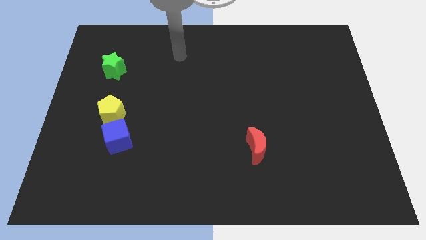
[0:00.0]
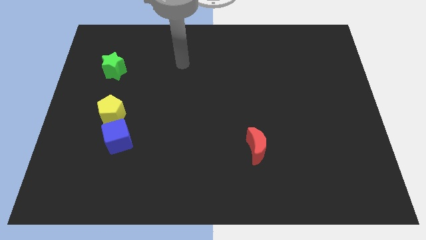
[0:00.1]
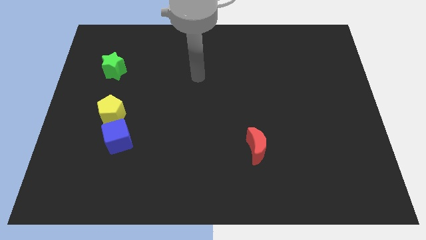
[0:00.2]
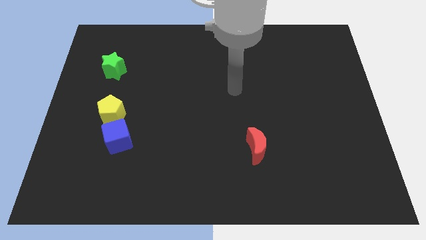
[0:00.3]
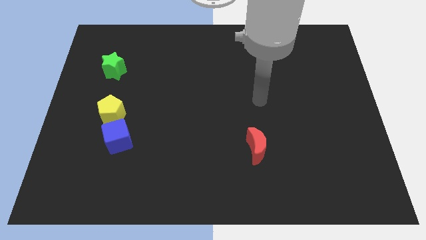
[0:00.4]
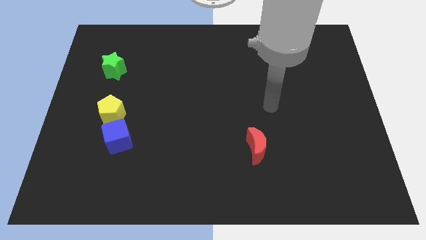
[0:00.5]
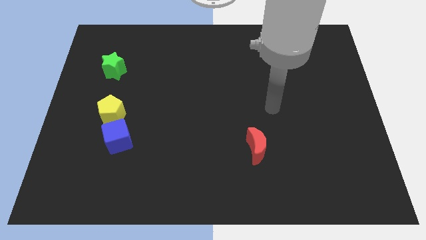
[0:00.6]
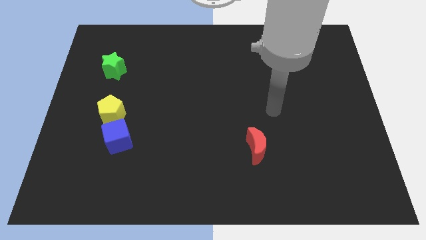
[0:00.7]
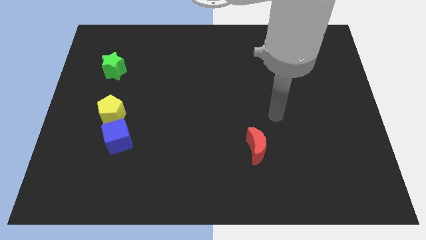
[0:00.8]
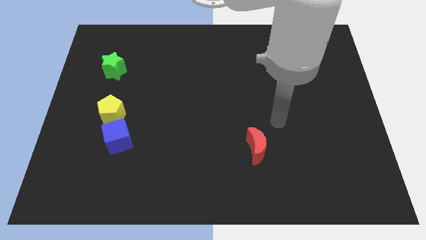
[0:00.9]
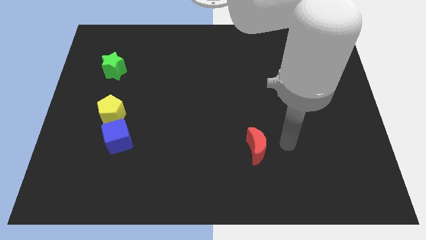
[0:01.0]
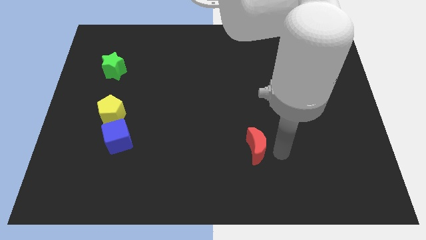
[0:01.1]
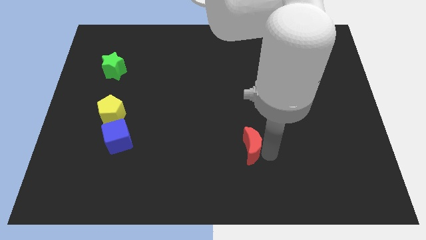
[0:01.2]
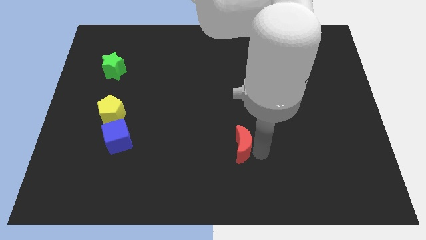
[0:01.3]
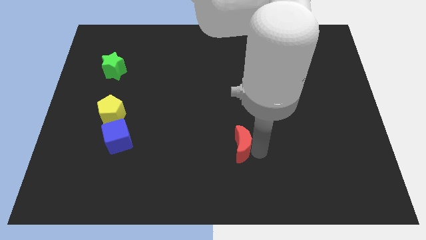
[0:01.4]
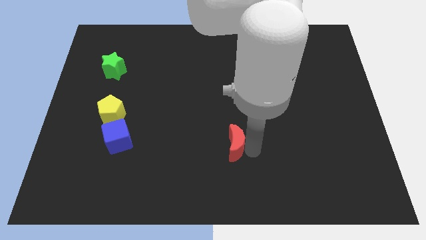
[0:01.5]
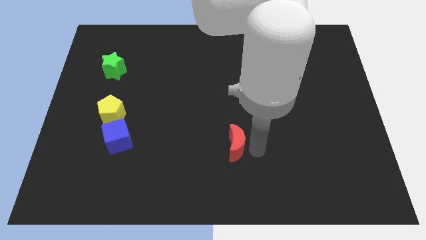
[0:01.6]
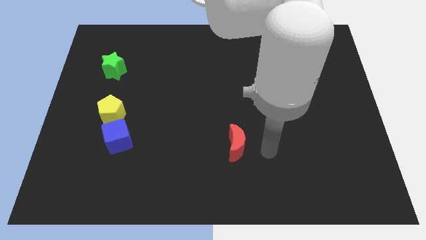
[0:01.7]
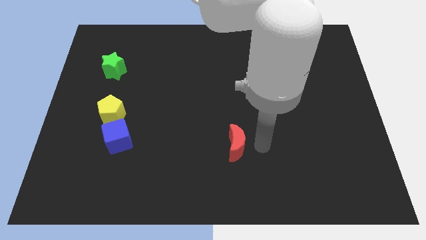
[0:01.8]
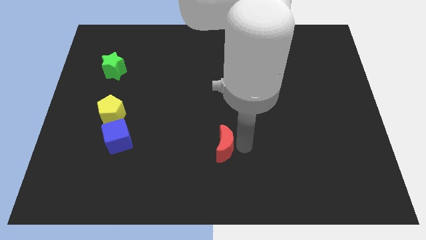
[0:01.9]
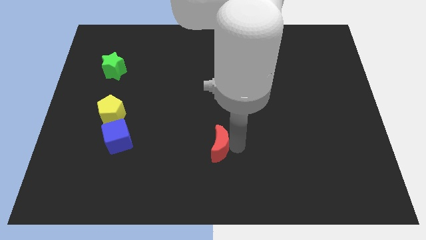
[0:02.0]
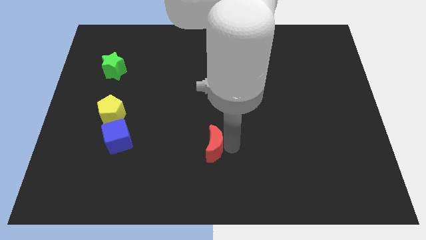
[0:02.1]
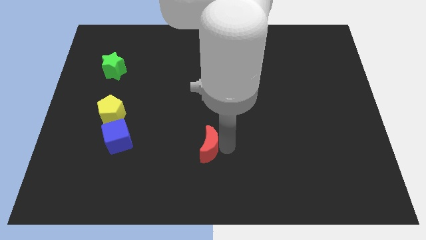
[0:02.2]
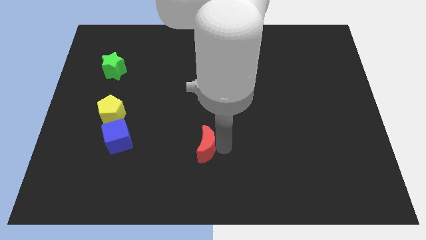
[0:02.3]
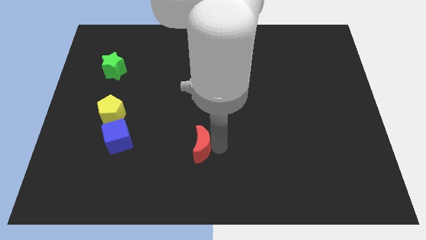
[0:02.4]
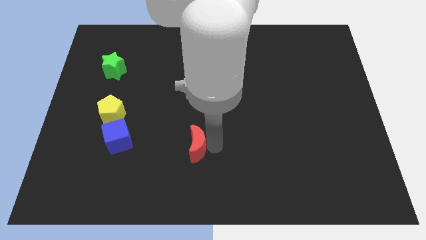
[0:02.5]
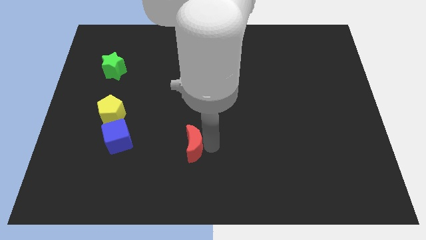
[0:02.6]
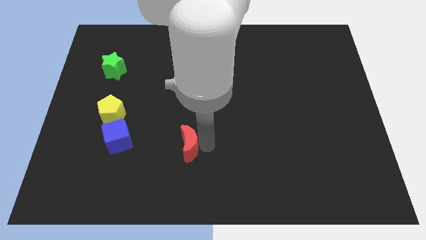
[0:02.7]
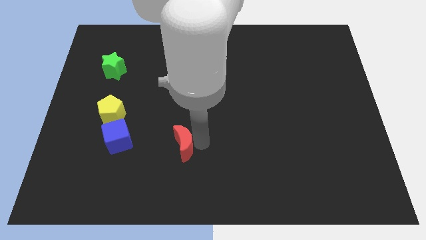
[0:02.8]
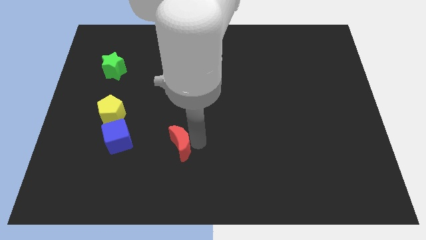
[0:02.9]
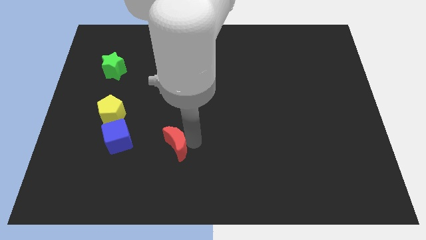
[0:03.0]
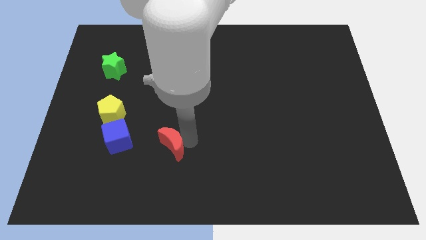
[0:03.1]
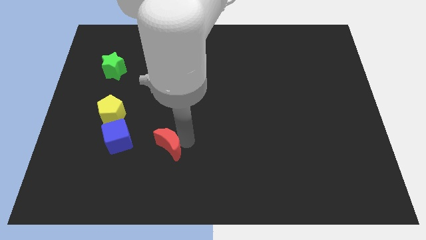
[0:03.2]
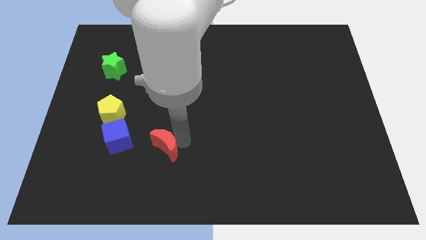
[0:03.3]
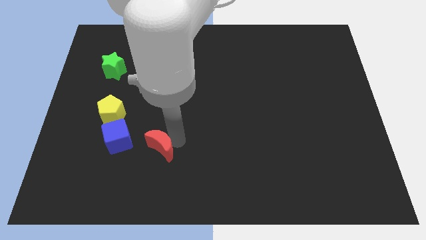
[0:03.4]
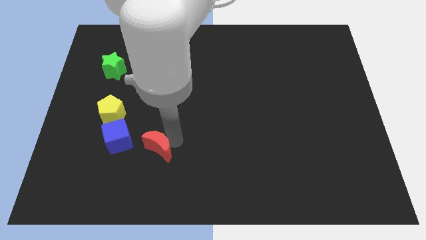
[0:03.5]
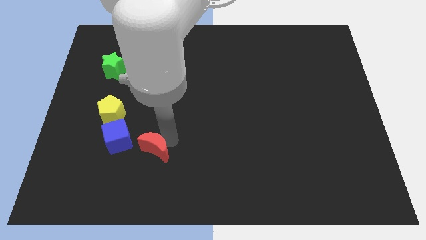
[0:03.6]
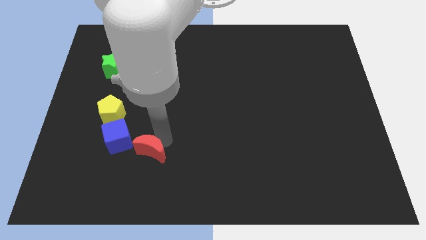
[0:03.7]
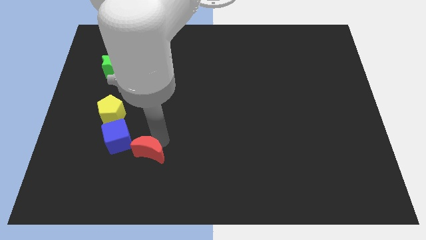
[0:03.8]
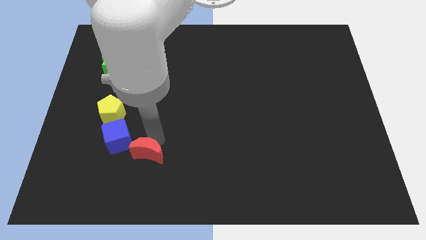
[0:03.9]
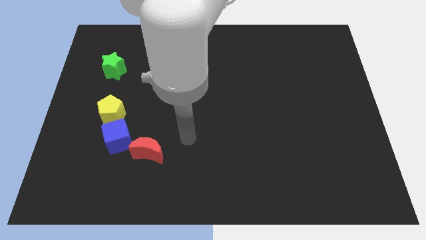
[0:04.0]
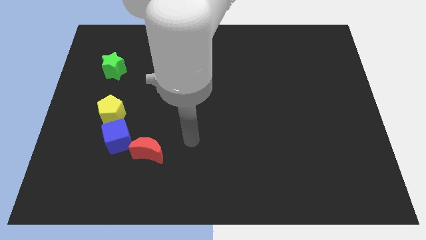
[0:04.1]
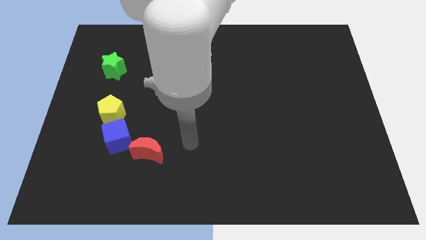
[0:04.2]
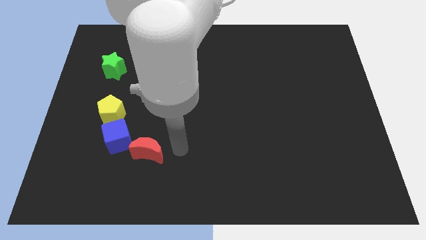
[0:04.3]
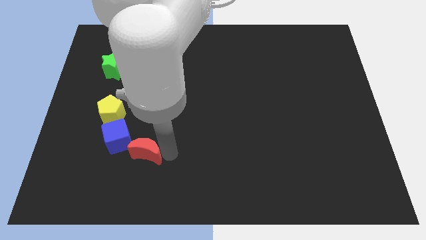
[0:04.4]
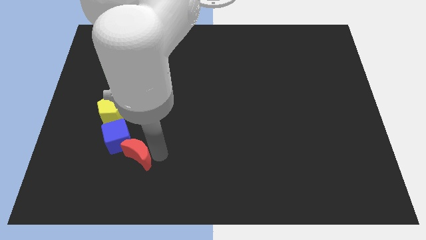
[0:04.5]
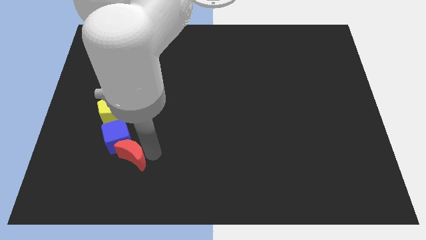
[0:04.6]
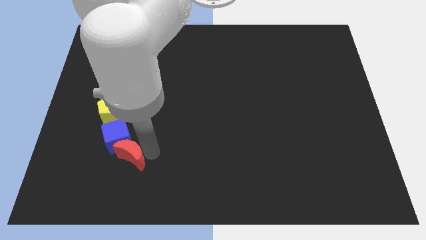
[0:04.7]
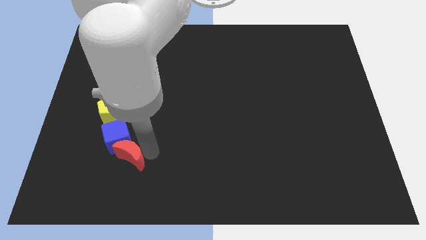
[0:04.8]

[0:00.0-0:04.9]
push the moon to the blue cube

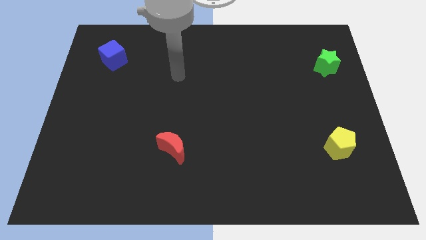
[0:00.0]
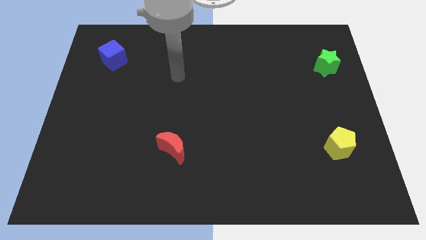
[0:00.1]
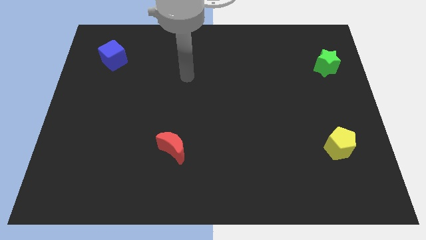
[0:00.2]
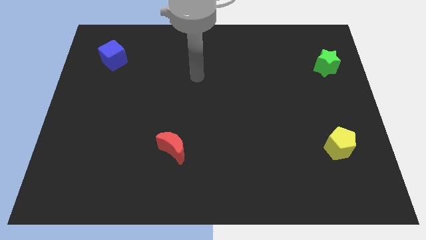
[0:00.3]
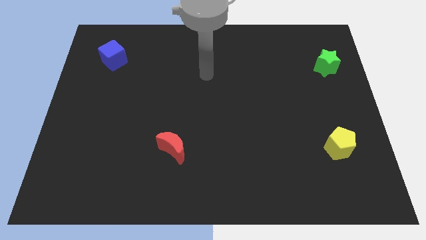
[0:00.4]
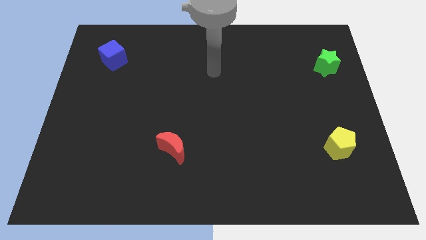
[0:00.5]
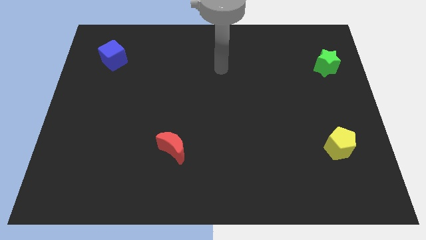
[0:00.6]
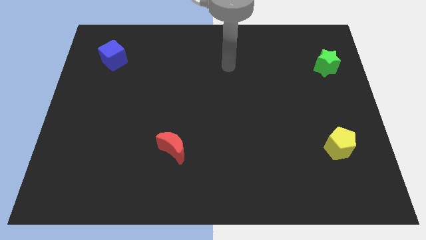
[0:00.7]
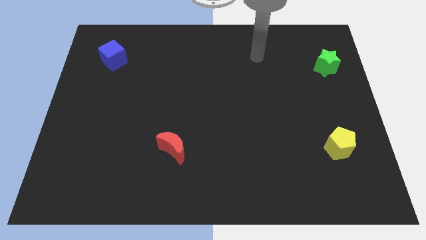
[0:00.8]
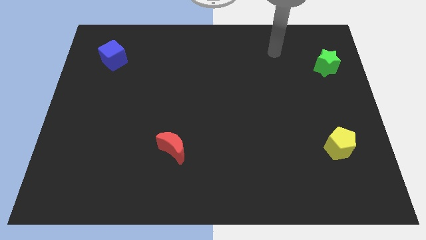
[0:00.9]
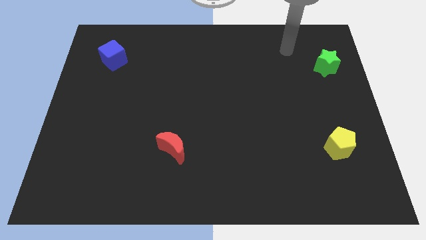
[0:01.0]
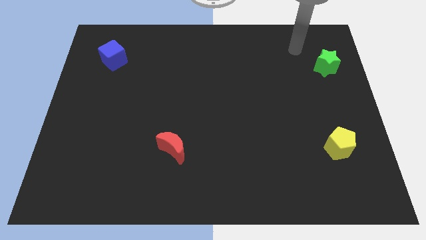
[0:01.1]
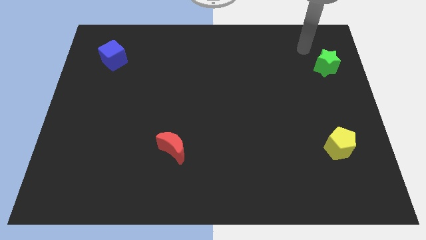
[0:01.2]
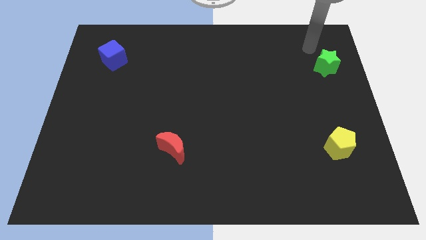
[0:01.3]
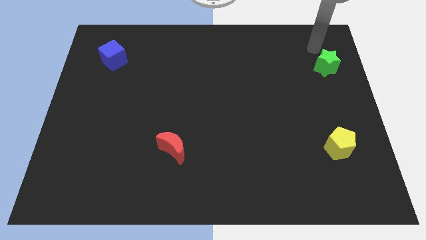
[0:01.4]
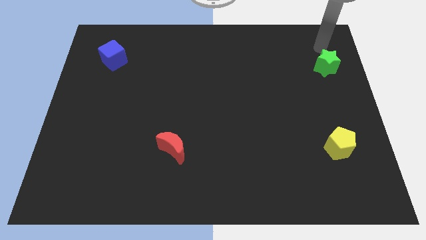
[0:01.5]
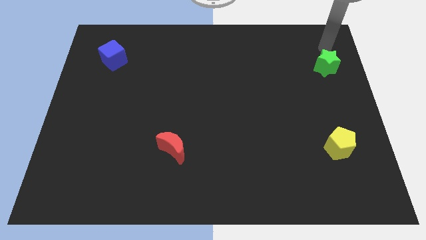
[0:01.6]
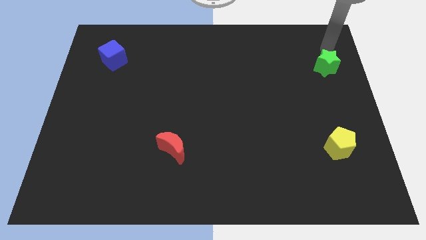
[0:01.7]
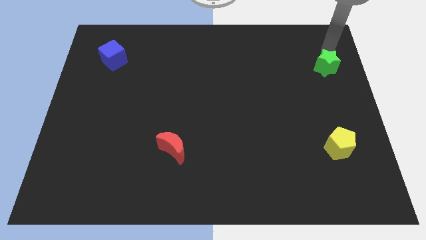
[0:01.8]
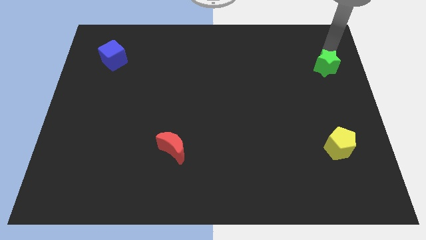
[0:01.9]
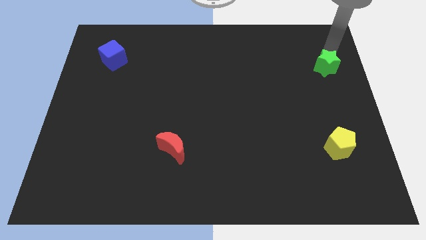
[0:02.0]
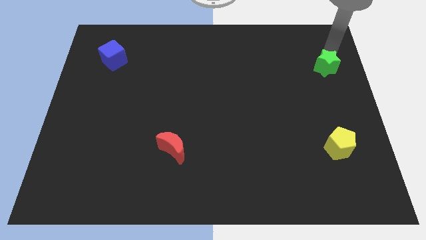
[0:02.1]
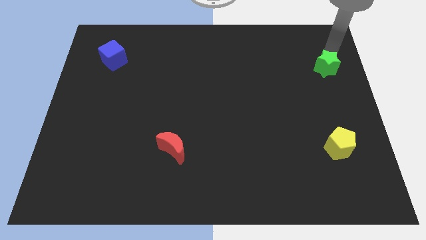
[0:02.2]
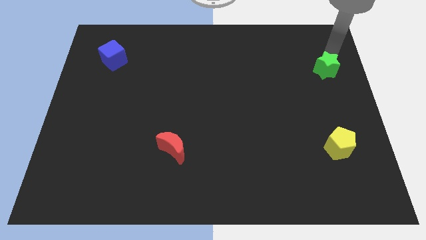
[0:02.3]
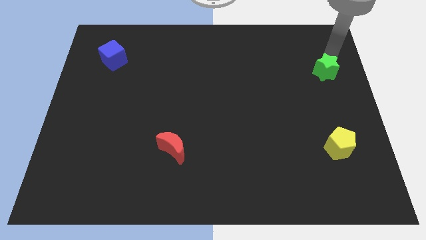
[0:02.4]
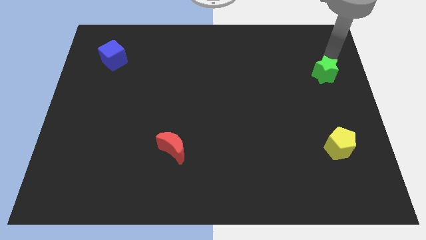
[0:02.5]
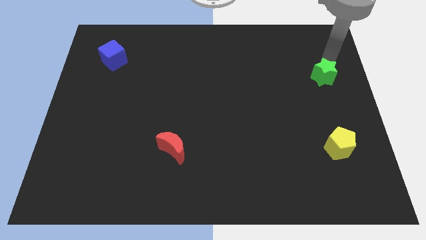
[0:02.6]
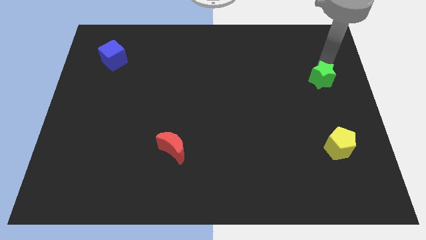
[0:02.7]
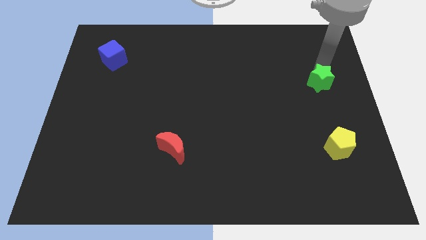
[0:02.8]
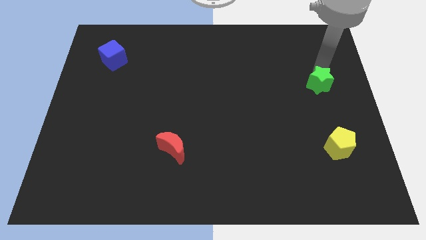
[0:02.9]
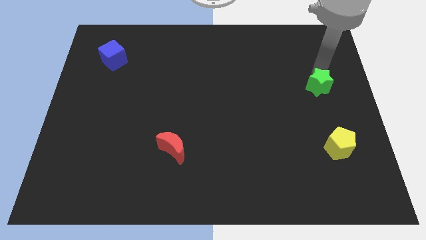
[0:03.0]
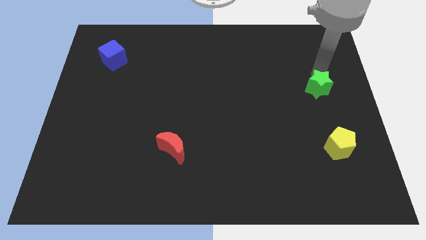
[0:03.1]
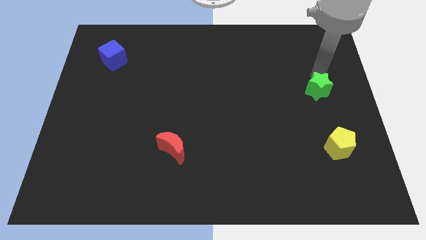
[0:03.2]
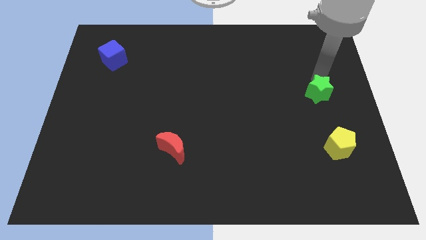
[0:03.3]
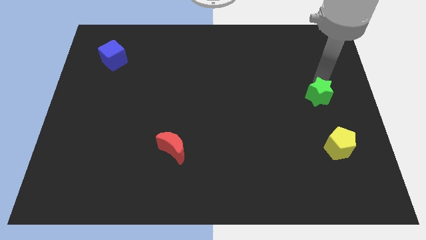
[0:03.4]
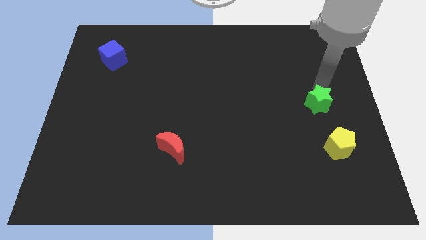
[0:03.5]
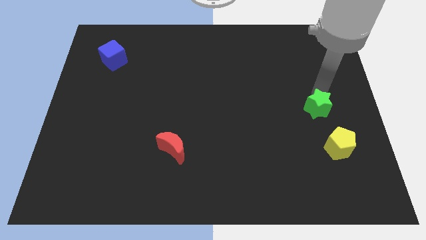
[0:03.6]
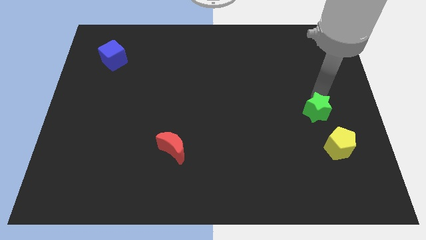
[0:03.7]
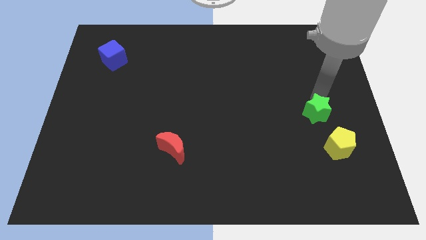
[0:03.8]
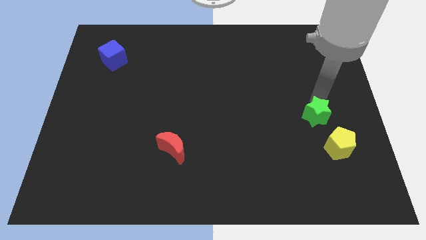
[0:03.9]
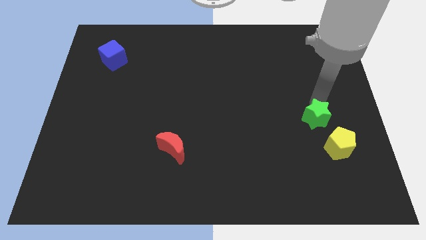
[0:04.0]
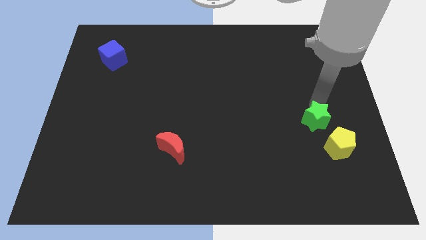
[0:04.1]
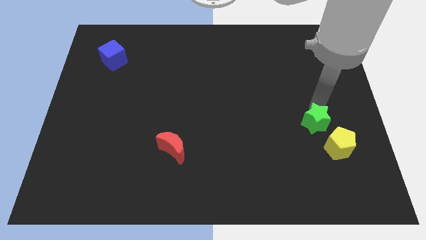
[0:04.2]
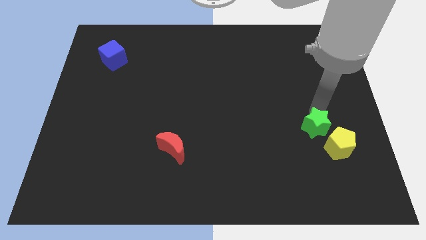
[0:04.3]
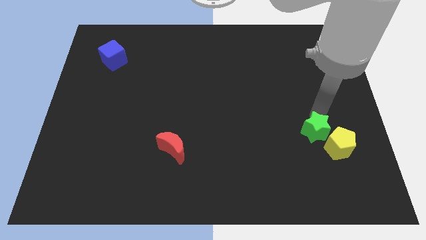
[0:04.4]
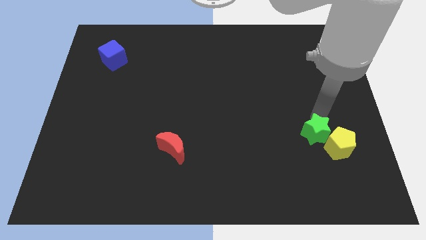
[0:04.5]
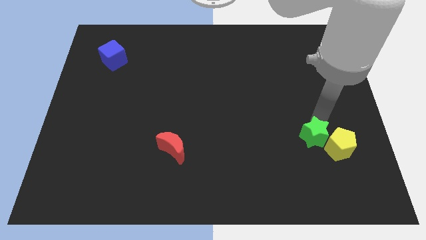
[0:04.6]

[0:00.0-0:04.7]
put the star next to the yellow block
